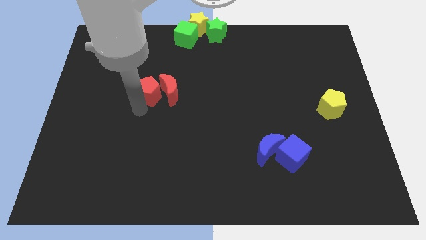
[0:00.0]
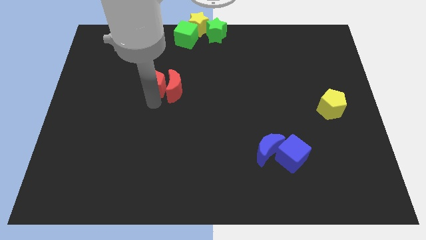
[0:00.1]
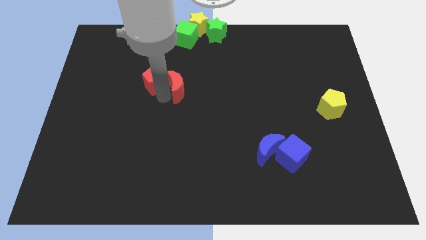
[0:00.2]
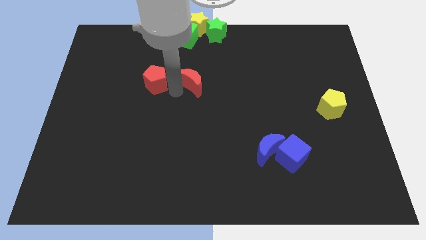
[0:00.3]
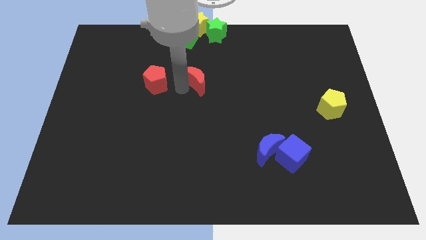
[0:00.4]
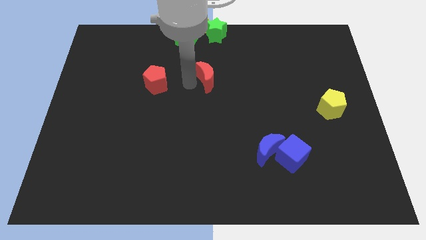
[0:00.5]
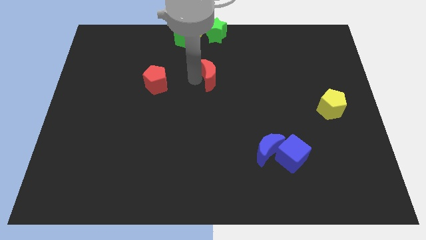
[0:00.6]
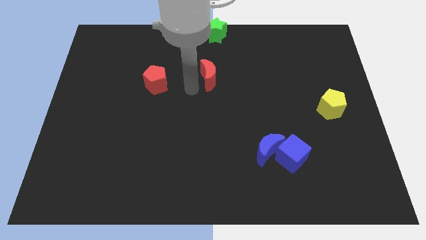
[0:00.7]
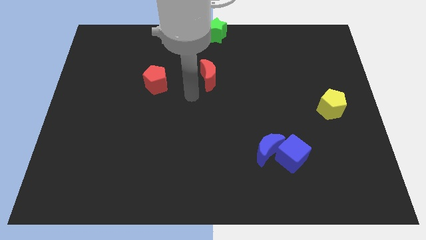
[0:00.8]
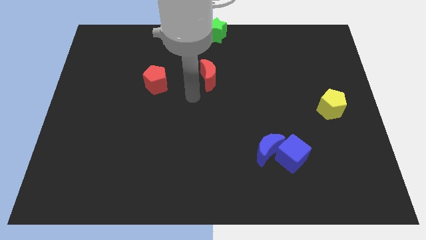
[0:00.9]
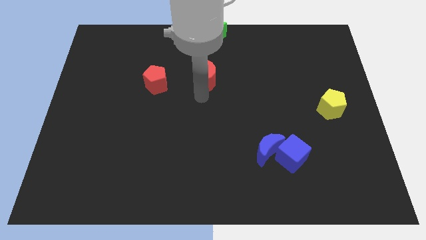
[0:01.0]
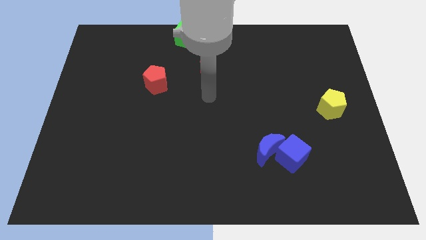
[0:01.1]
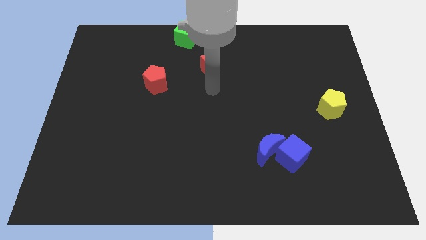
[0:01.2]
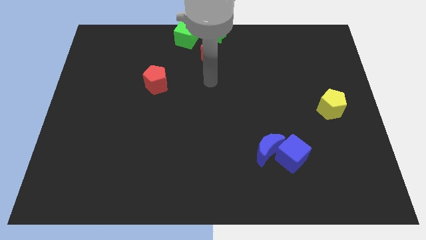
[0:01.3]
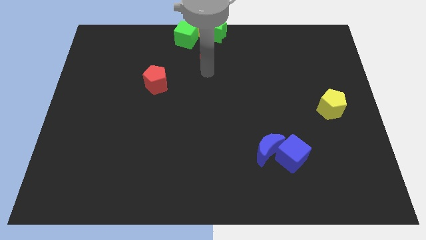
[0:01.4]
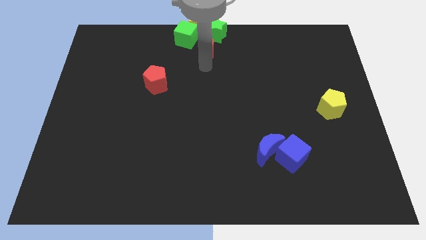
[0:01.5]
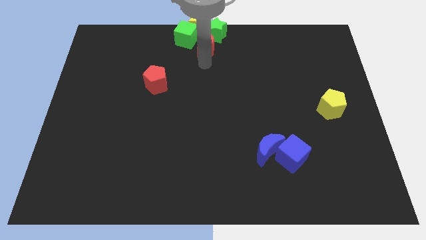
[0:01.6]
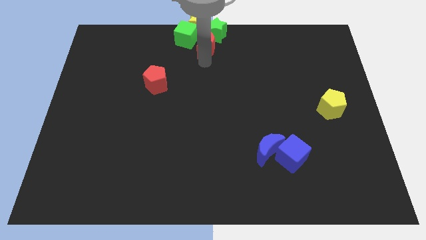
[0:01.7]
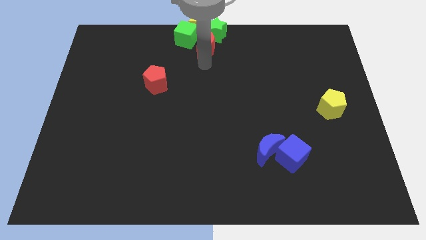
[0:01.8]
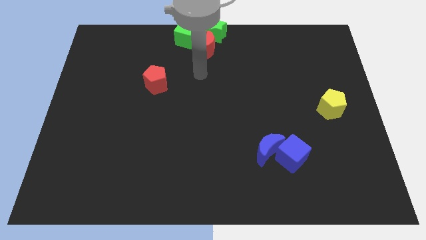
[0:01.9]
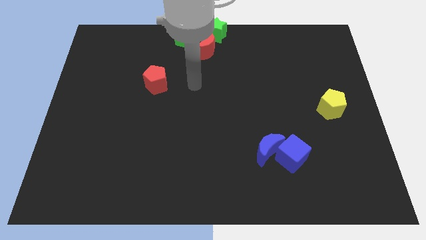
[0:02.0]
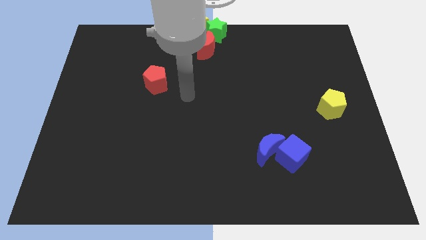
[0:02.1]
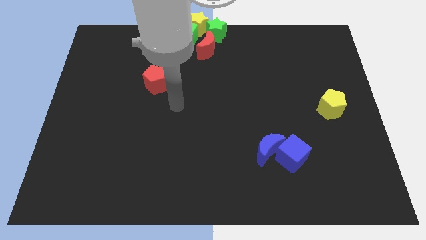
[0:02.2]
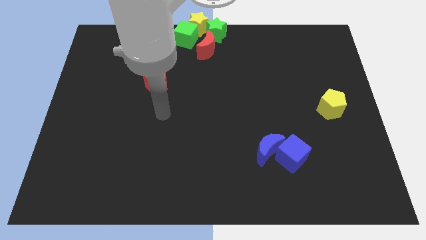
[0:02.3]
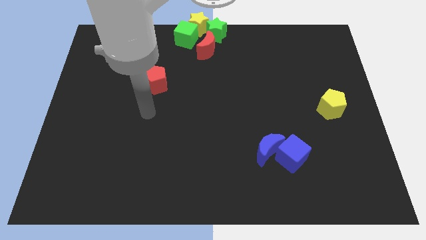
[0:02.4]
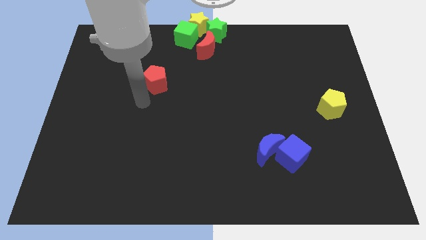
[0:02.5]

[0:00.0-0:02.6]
push the red crescent in between both green objects

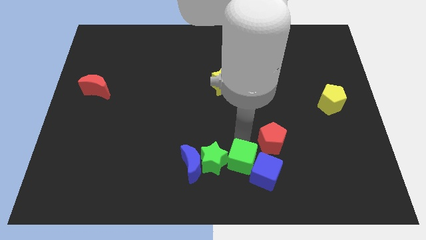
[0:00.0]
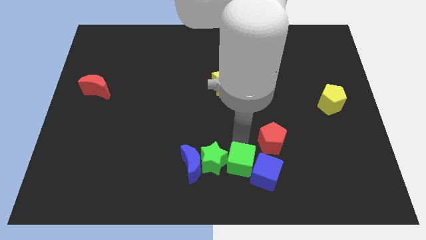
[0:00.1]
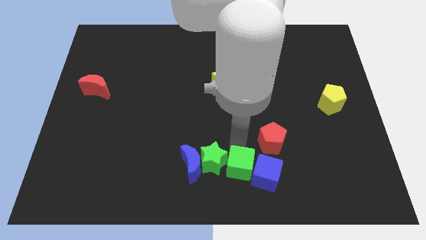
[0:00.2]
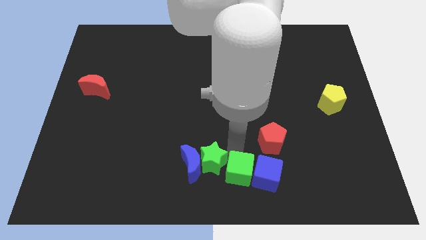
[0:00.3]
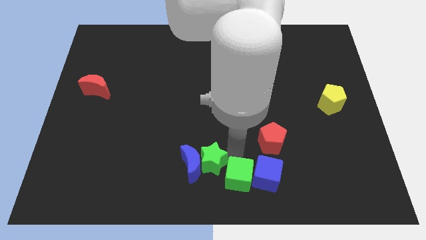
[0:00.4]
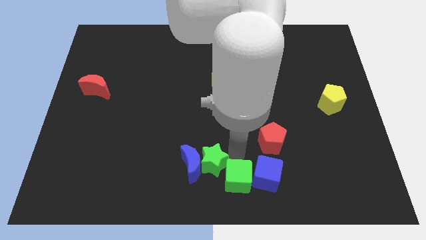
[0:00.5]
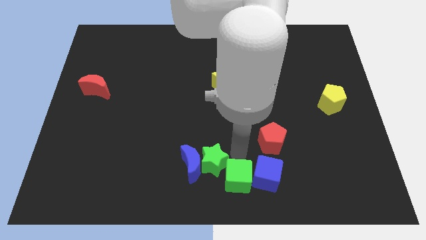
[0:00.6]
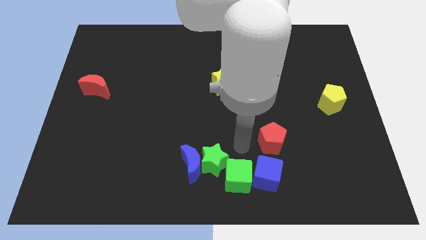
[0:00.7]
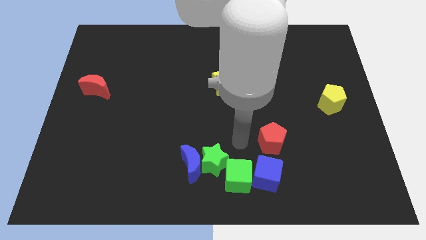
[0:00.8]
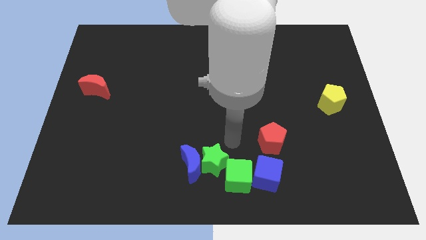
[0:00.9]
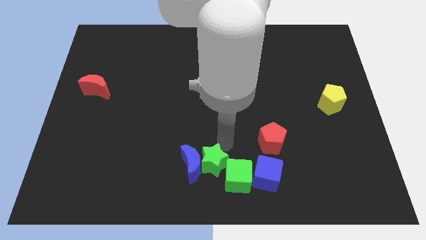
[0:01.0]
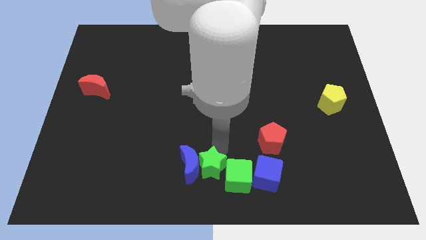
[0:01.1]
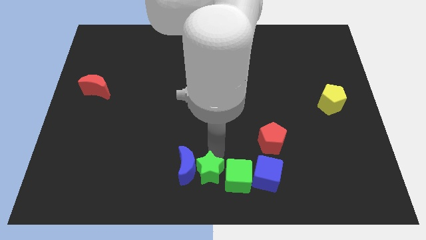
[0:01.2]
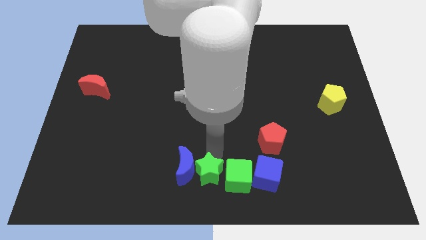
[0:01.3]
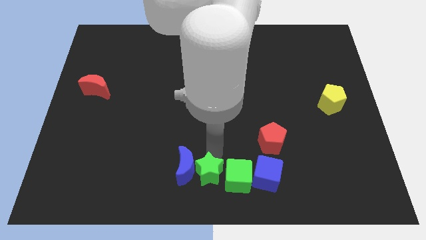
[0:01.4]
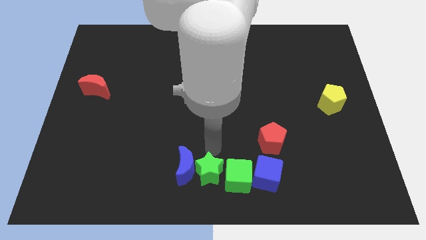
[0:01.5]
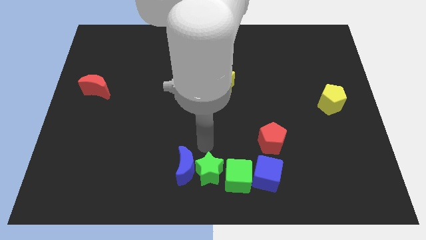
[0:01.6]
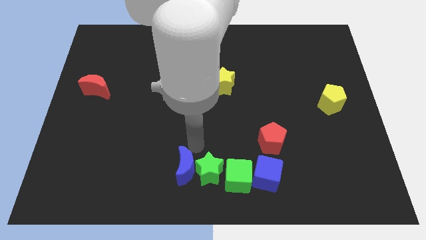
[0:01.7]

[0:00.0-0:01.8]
push the green cube and star slightly to bottom

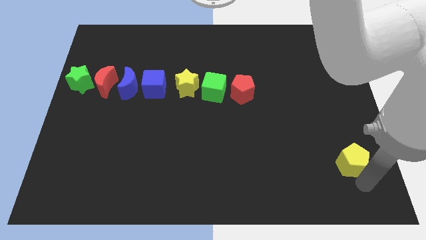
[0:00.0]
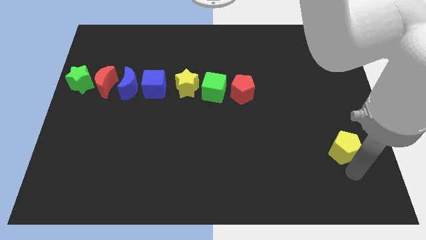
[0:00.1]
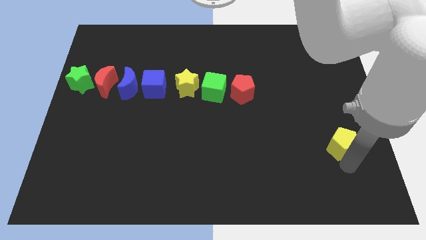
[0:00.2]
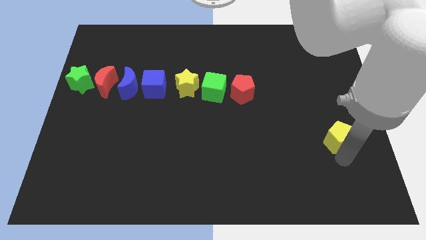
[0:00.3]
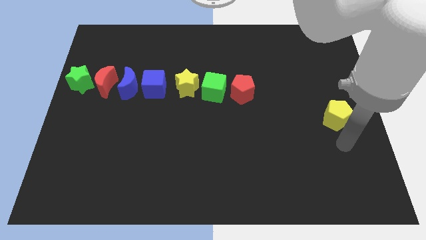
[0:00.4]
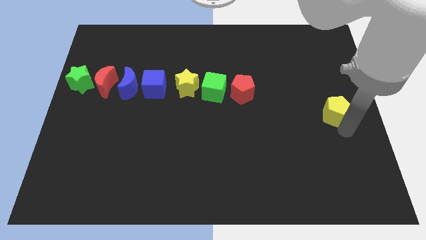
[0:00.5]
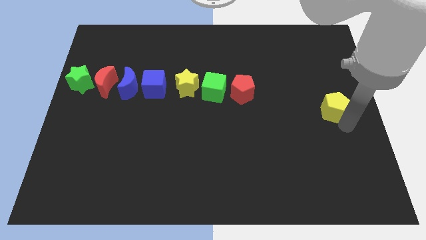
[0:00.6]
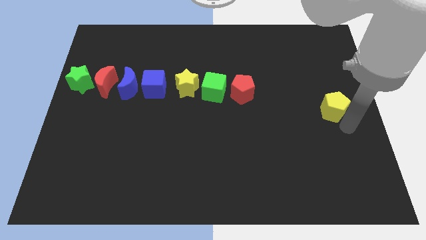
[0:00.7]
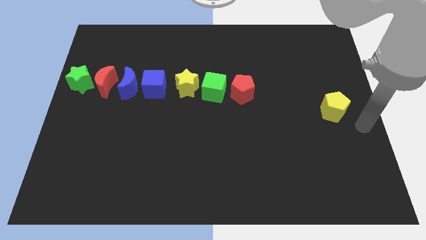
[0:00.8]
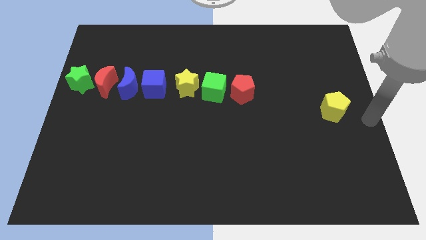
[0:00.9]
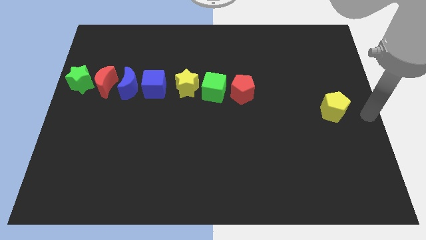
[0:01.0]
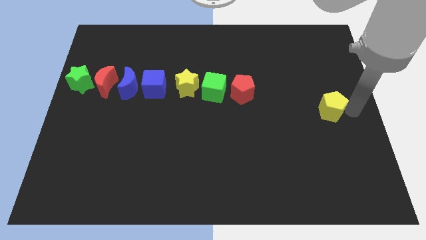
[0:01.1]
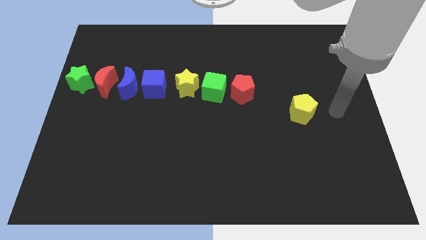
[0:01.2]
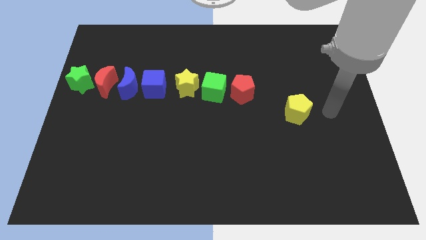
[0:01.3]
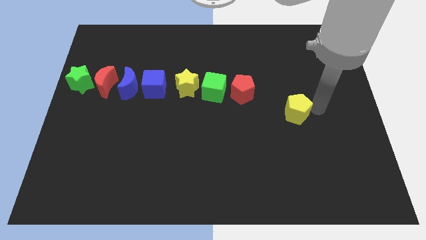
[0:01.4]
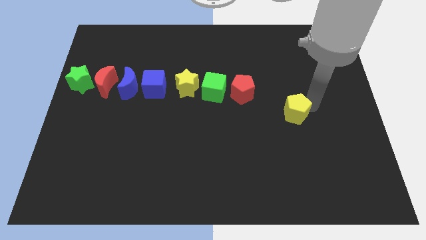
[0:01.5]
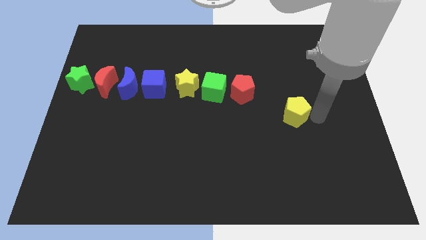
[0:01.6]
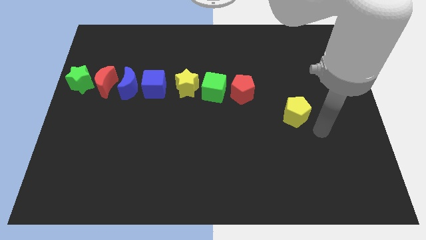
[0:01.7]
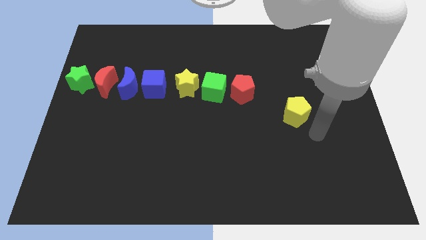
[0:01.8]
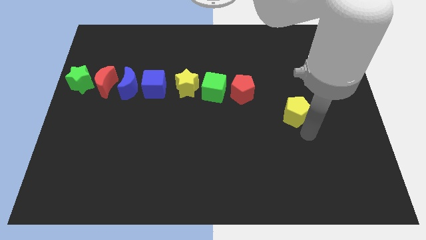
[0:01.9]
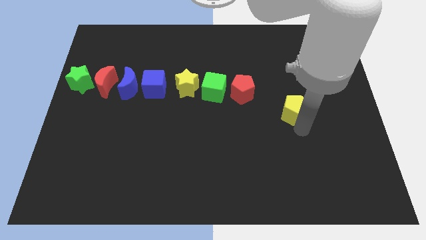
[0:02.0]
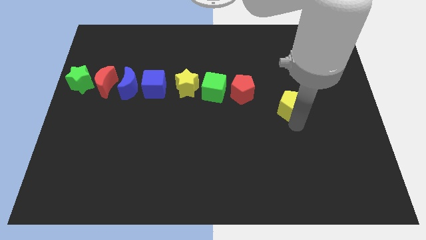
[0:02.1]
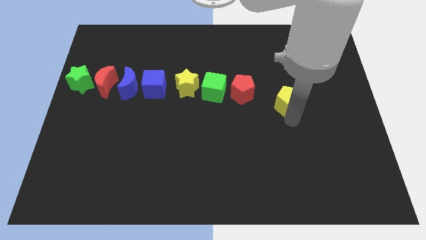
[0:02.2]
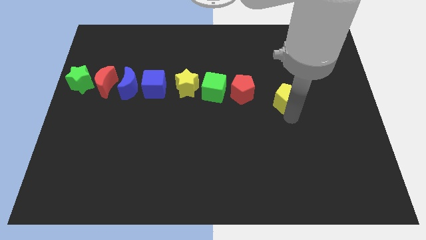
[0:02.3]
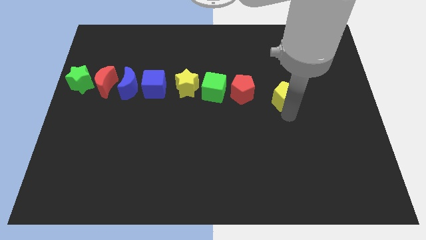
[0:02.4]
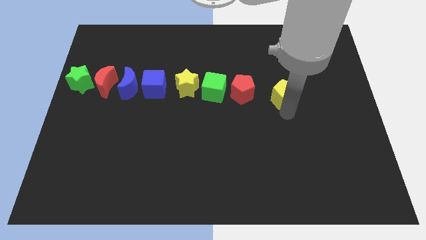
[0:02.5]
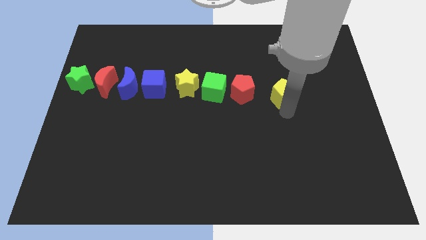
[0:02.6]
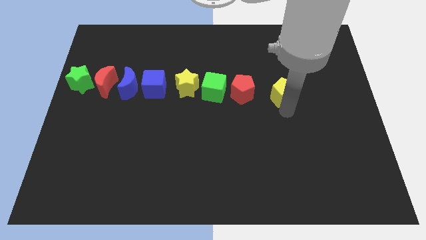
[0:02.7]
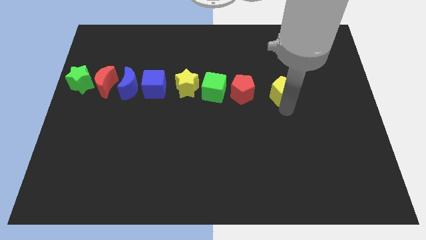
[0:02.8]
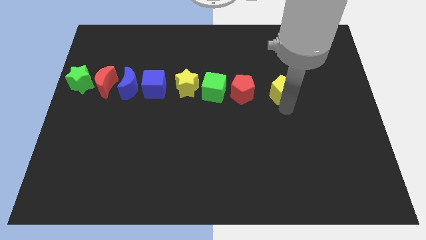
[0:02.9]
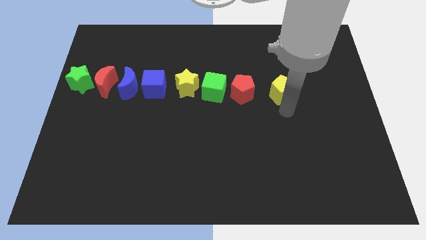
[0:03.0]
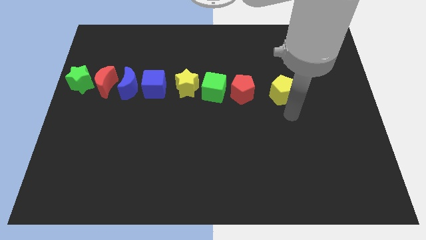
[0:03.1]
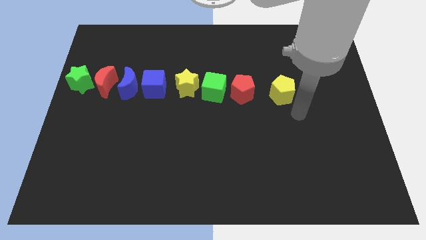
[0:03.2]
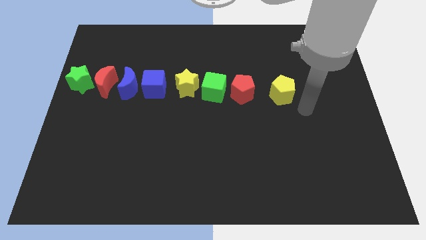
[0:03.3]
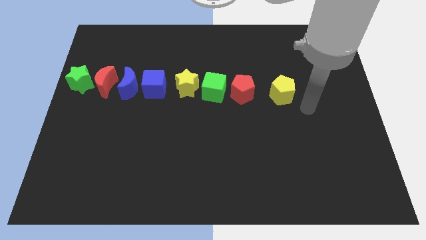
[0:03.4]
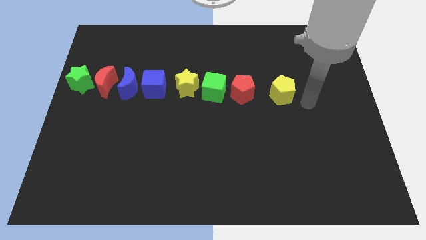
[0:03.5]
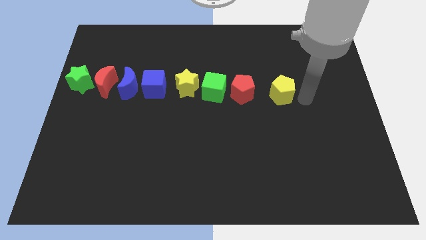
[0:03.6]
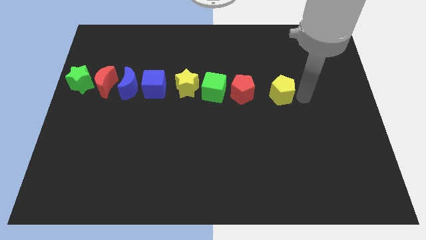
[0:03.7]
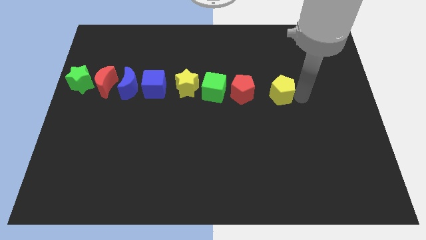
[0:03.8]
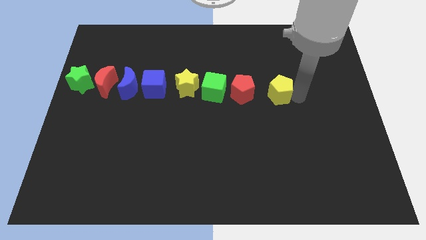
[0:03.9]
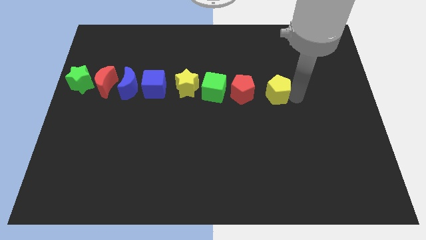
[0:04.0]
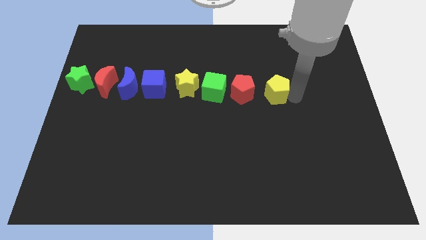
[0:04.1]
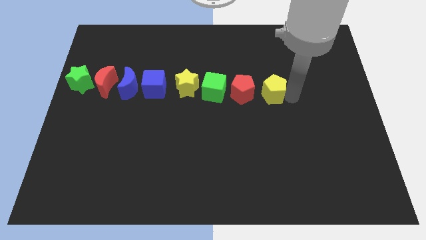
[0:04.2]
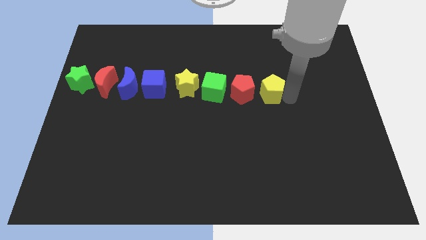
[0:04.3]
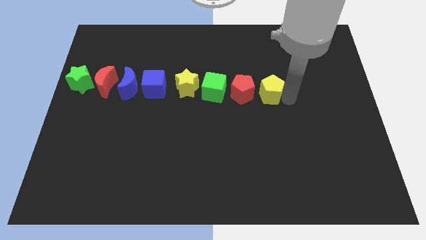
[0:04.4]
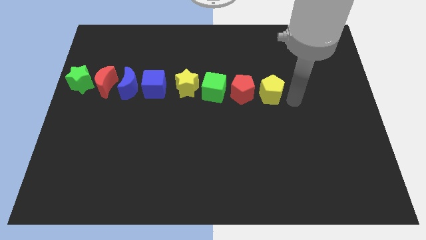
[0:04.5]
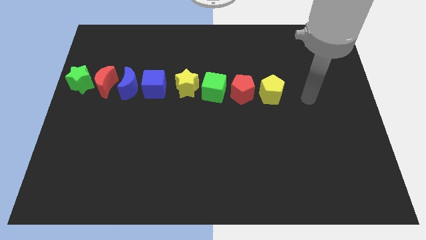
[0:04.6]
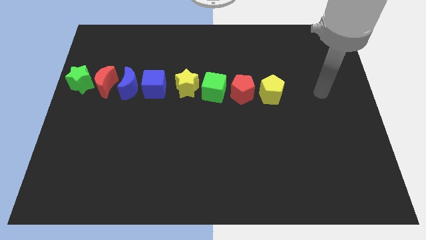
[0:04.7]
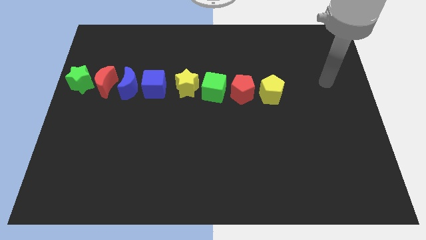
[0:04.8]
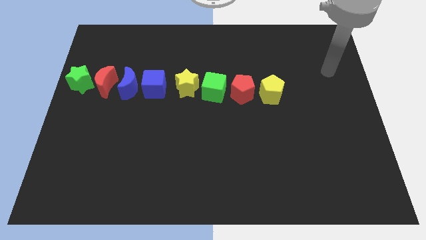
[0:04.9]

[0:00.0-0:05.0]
place yellow pentagon parallel to red crescent
